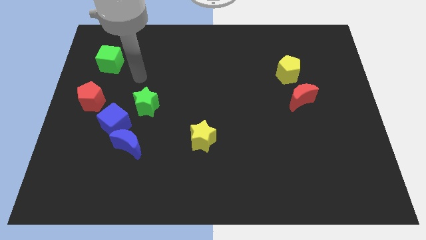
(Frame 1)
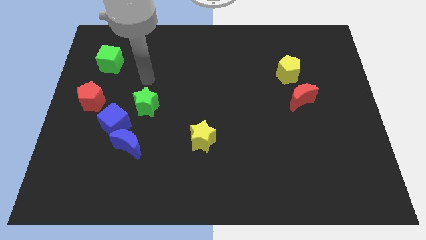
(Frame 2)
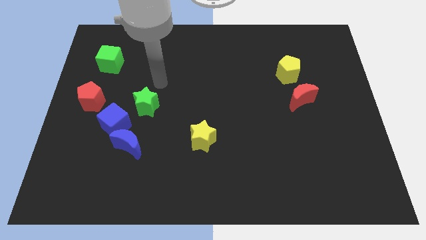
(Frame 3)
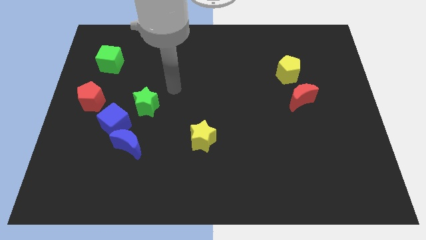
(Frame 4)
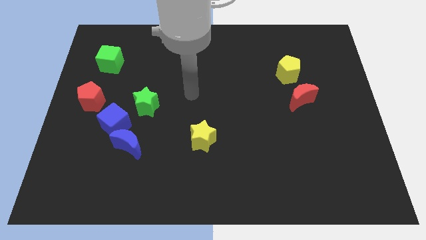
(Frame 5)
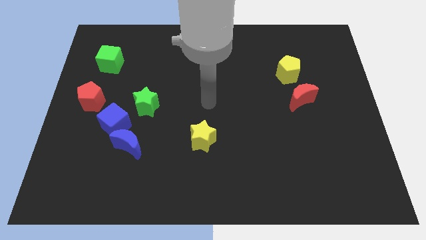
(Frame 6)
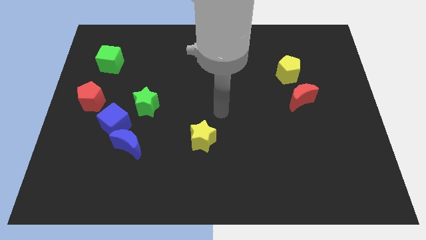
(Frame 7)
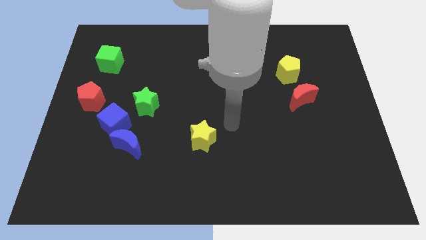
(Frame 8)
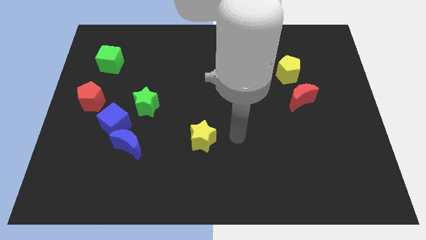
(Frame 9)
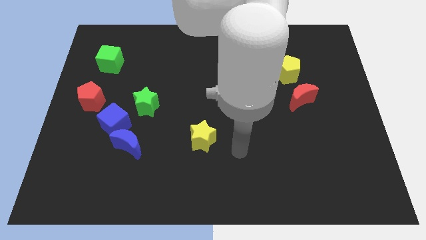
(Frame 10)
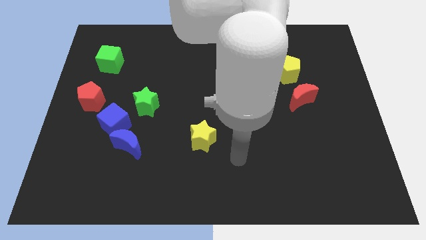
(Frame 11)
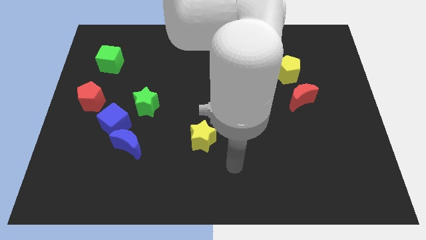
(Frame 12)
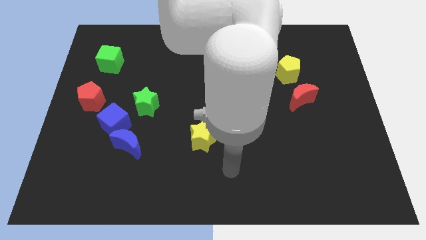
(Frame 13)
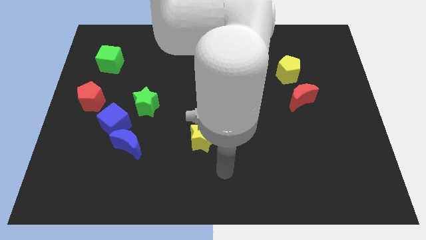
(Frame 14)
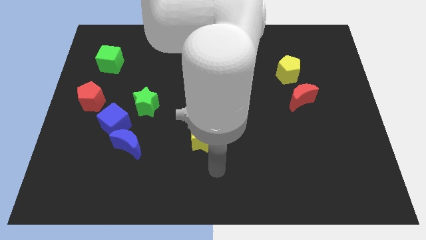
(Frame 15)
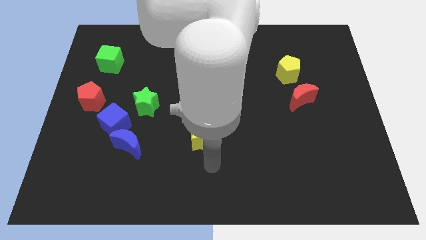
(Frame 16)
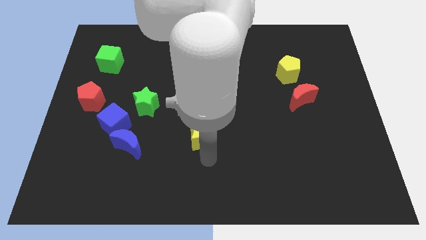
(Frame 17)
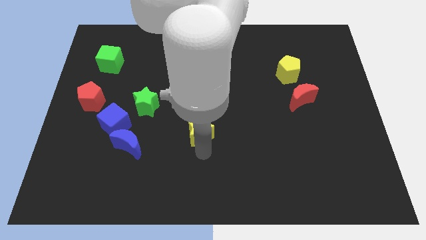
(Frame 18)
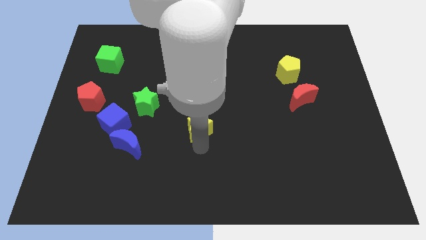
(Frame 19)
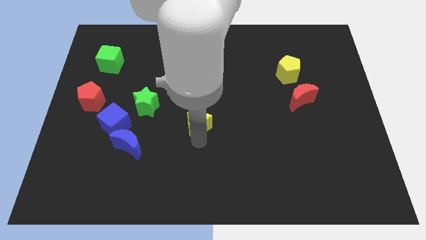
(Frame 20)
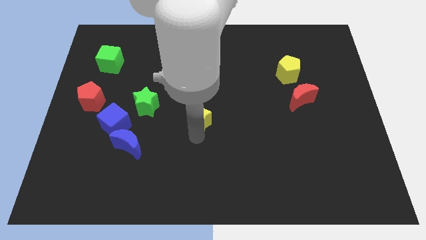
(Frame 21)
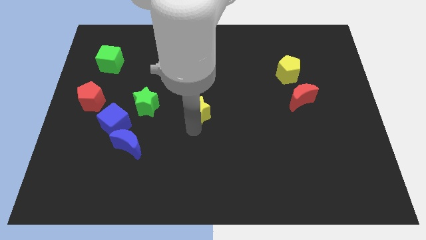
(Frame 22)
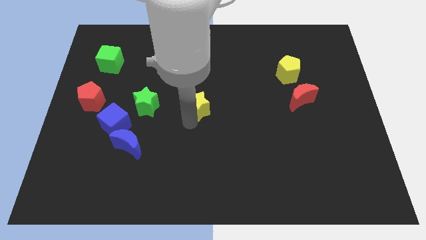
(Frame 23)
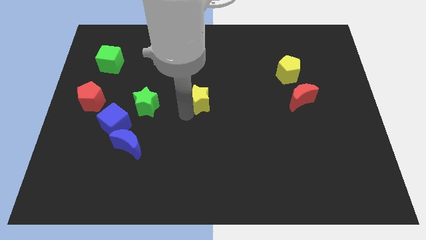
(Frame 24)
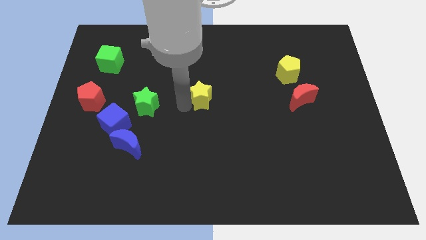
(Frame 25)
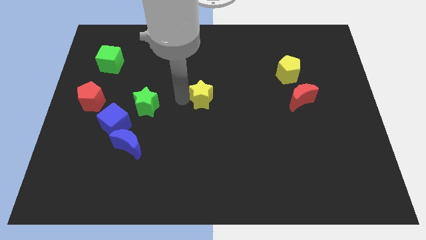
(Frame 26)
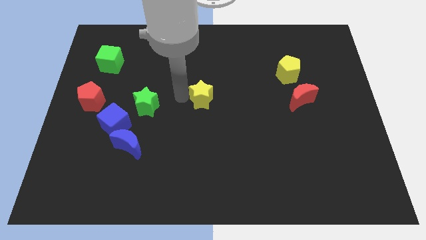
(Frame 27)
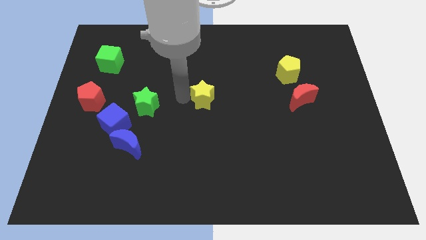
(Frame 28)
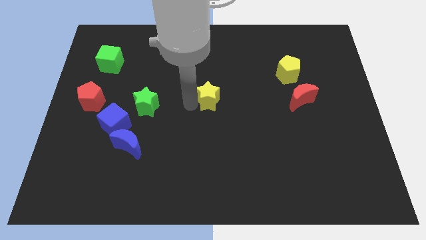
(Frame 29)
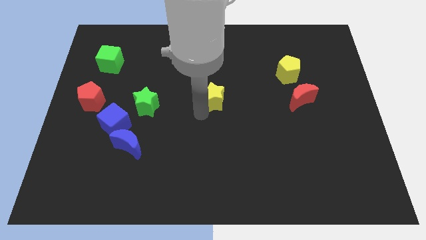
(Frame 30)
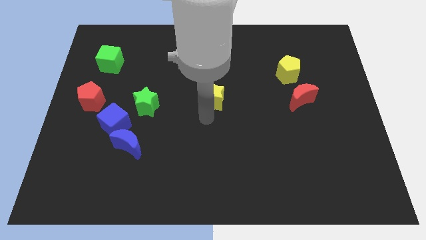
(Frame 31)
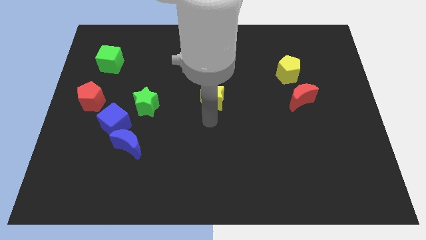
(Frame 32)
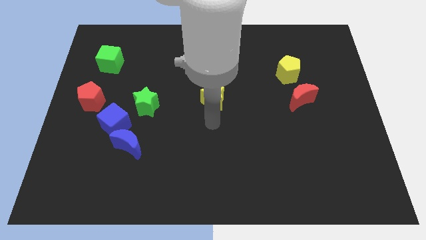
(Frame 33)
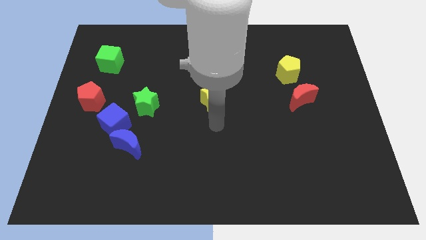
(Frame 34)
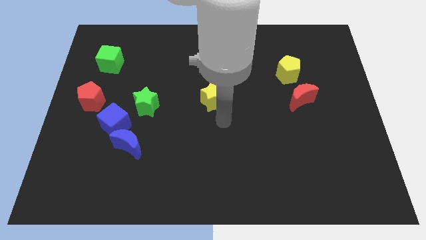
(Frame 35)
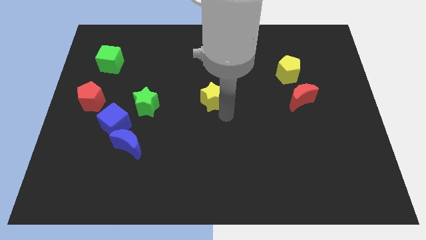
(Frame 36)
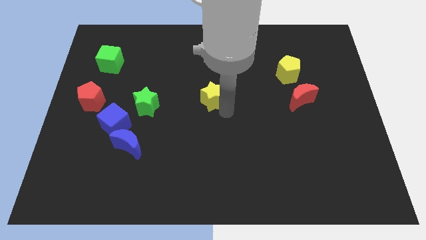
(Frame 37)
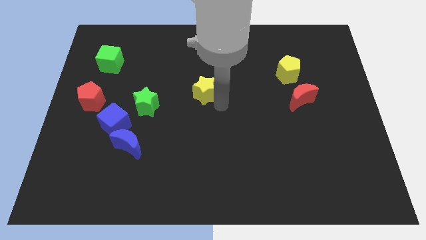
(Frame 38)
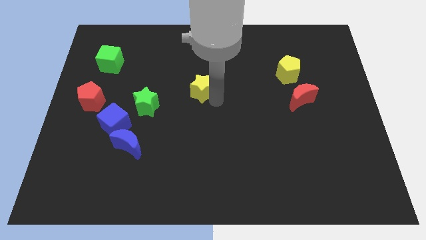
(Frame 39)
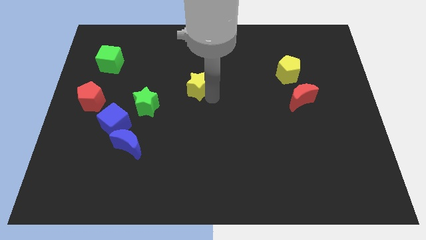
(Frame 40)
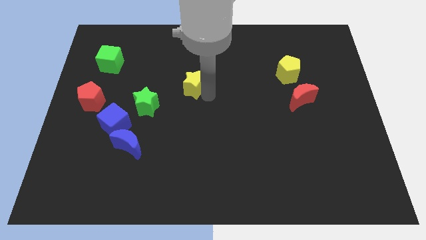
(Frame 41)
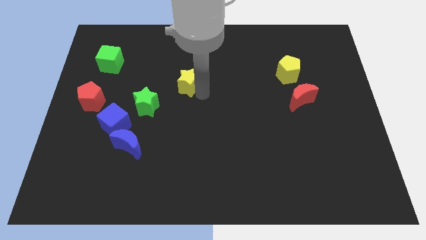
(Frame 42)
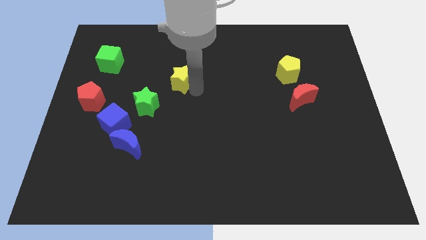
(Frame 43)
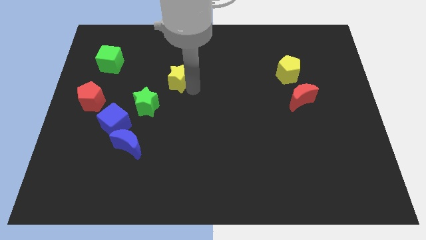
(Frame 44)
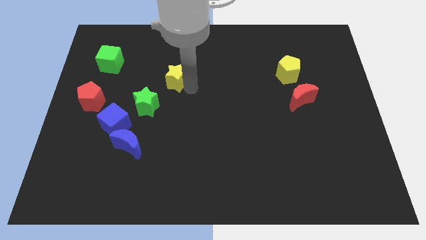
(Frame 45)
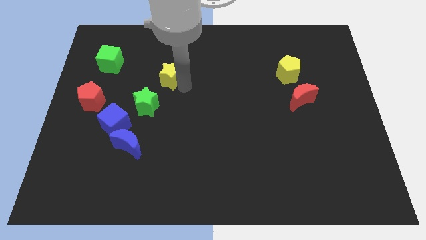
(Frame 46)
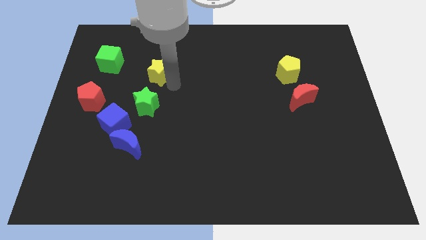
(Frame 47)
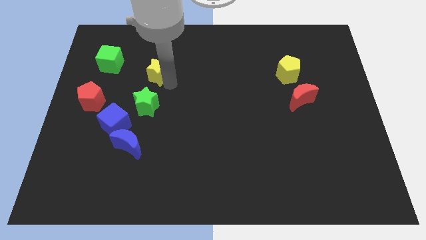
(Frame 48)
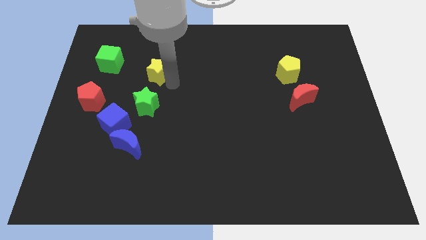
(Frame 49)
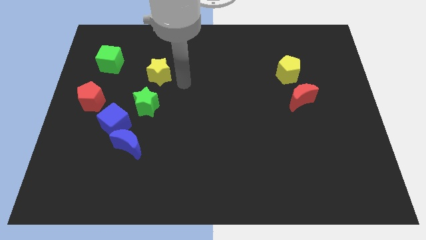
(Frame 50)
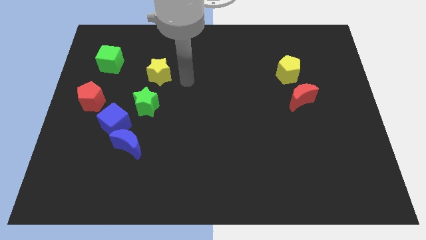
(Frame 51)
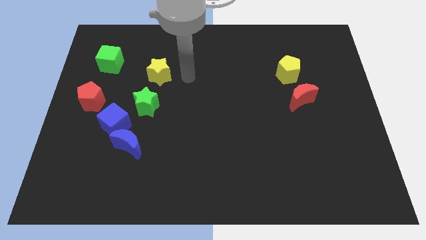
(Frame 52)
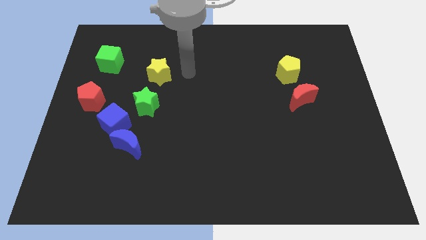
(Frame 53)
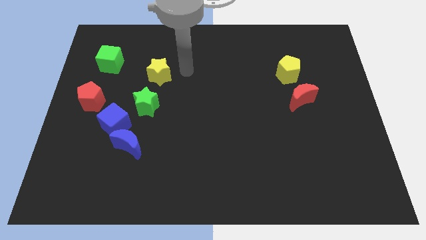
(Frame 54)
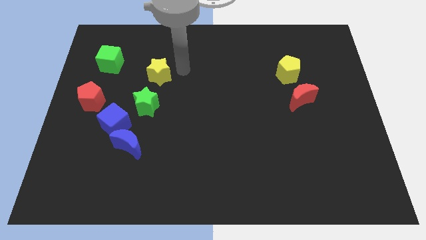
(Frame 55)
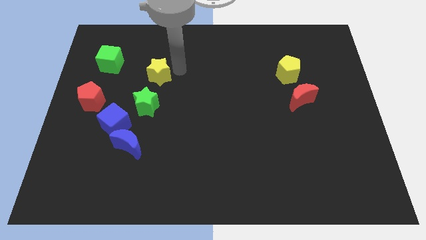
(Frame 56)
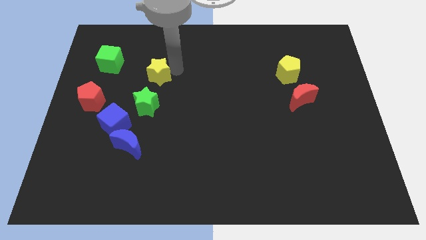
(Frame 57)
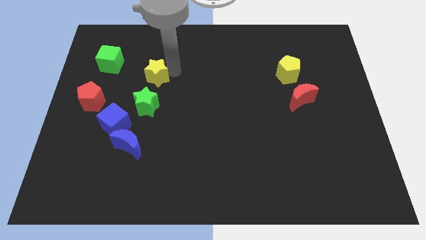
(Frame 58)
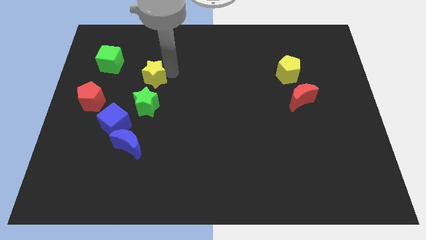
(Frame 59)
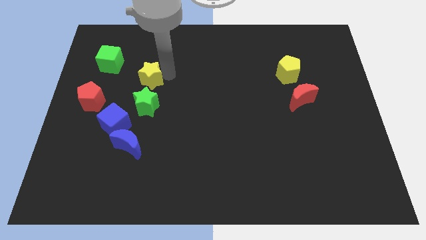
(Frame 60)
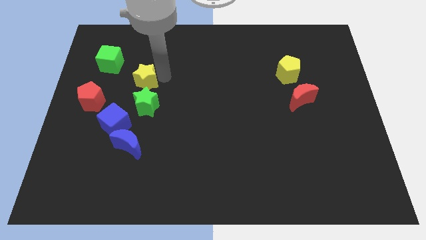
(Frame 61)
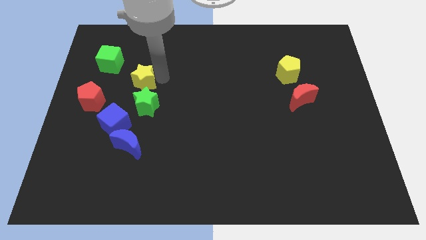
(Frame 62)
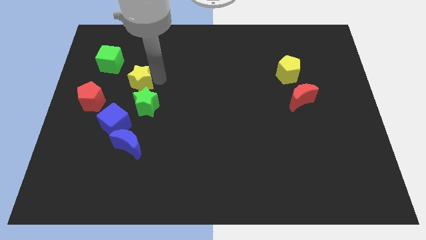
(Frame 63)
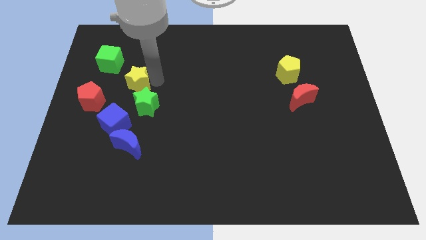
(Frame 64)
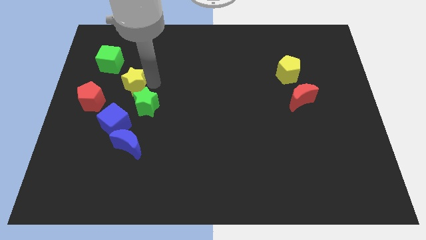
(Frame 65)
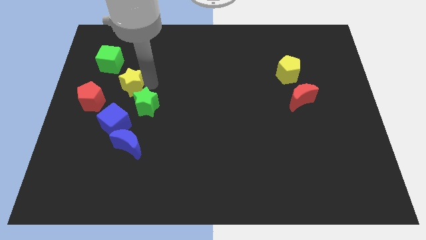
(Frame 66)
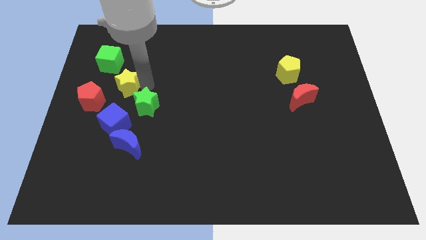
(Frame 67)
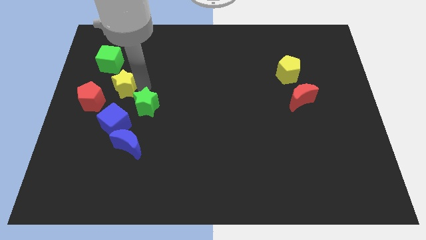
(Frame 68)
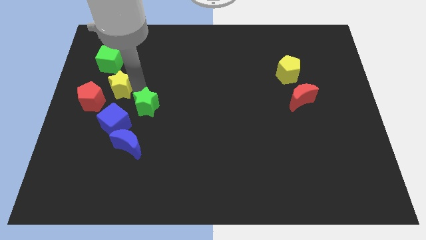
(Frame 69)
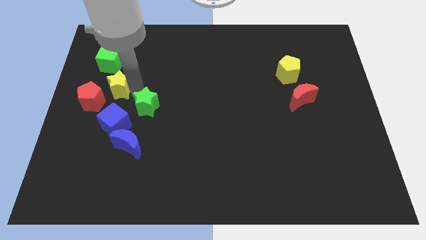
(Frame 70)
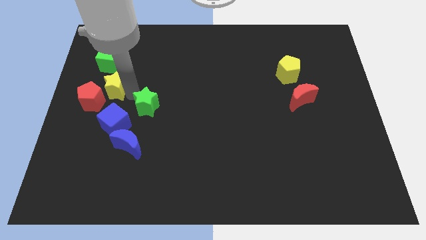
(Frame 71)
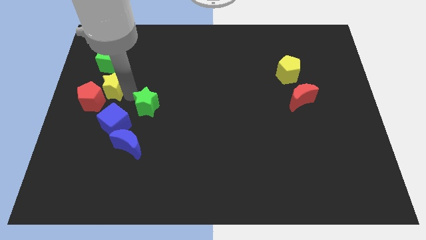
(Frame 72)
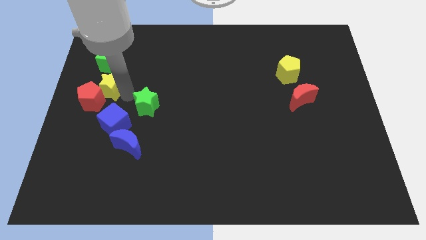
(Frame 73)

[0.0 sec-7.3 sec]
put the yellow star next to the red pentagon

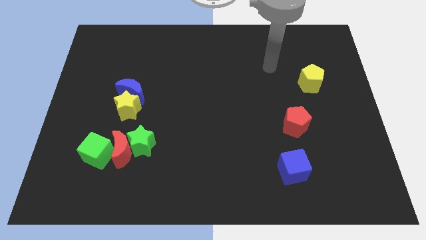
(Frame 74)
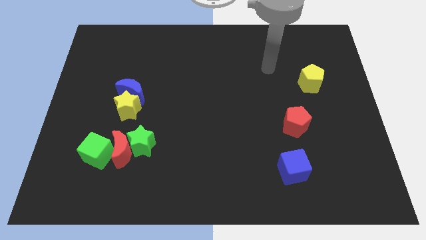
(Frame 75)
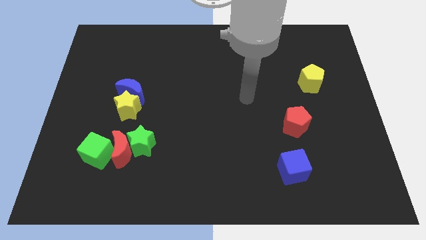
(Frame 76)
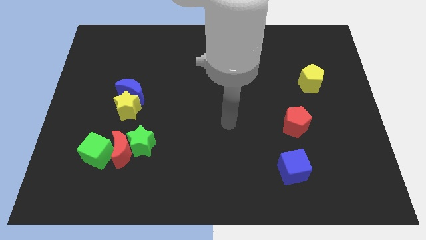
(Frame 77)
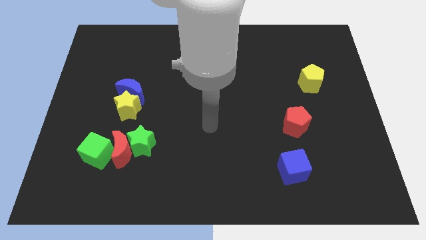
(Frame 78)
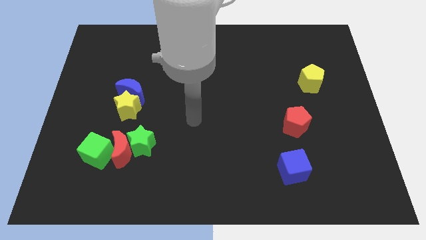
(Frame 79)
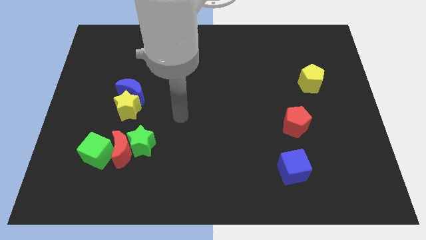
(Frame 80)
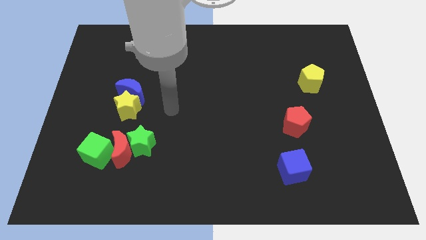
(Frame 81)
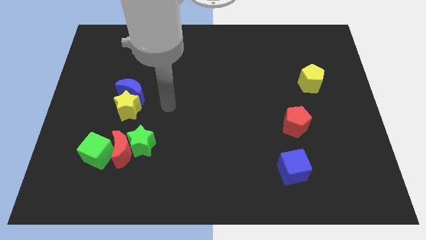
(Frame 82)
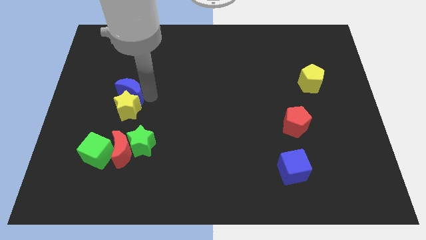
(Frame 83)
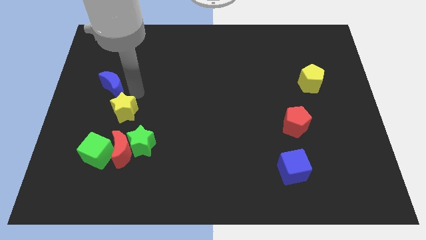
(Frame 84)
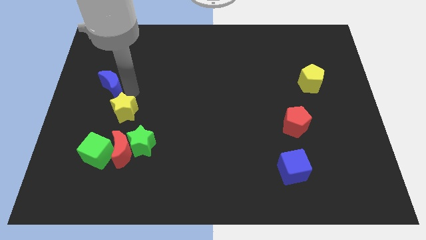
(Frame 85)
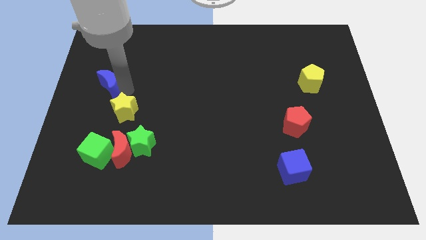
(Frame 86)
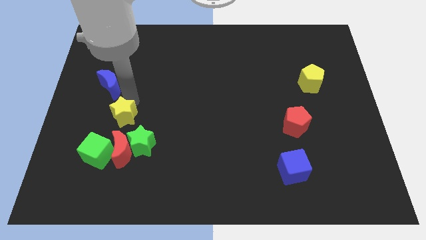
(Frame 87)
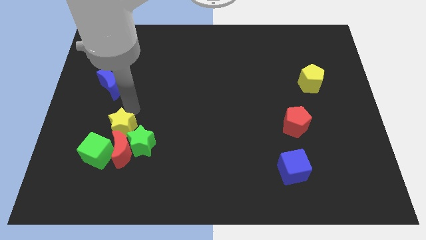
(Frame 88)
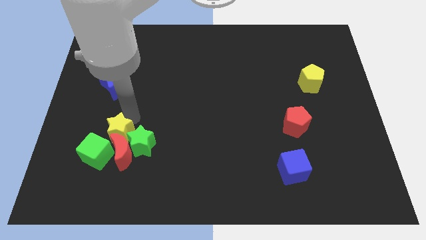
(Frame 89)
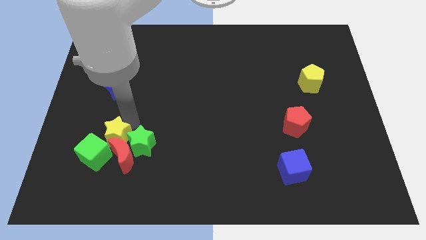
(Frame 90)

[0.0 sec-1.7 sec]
push the yellow star towards the red moon
